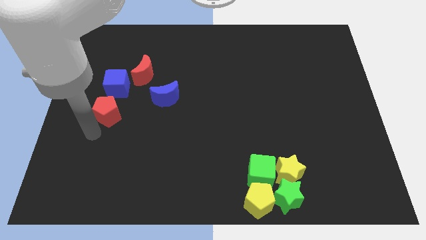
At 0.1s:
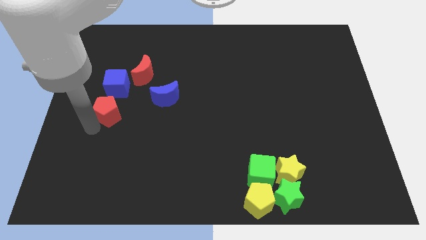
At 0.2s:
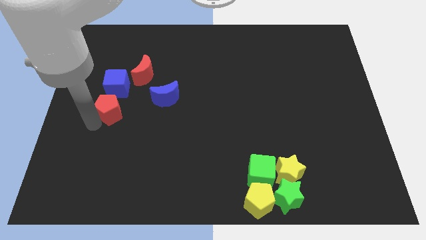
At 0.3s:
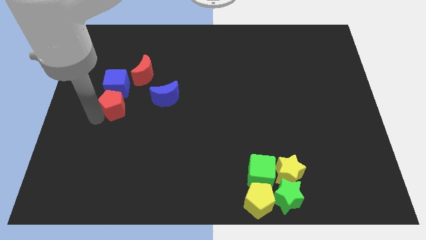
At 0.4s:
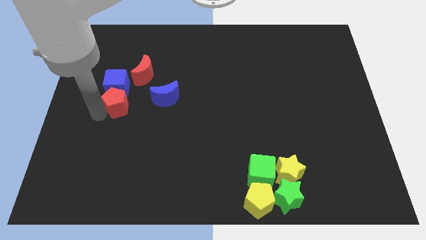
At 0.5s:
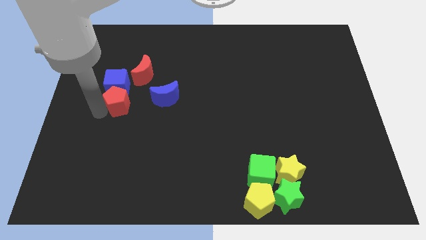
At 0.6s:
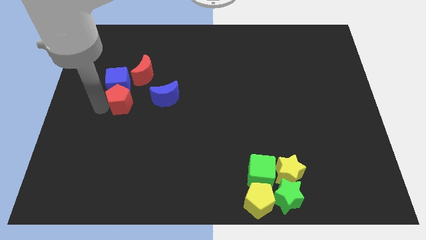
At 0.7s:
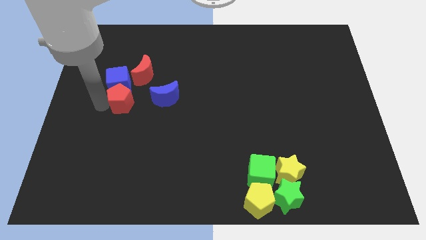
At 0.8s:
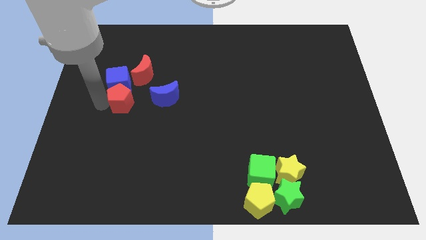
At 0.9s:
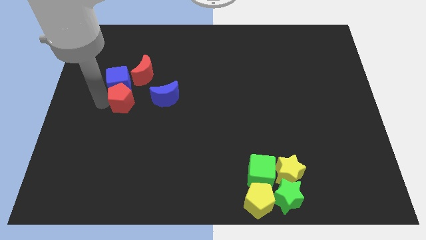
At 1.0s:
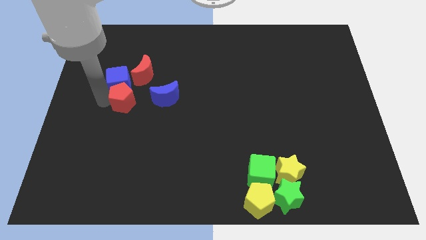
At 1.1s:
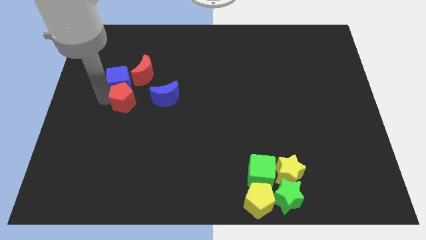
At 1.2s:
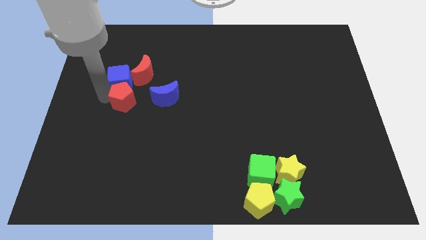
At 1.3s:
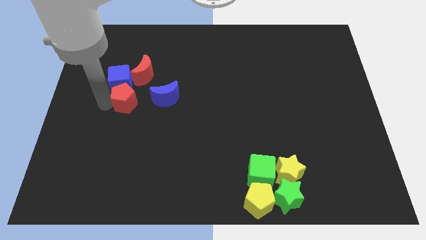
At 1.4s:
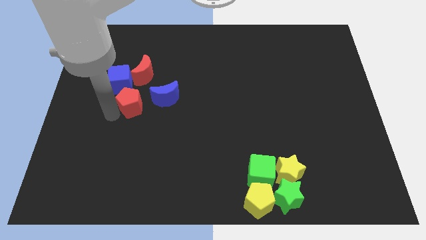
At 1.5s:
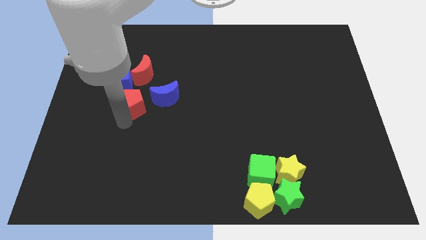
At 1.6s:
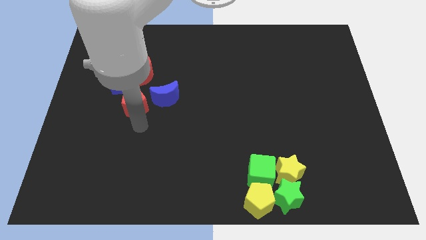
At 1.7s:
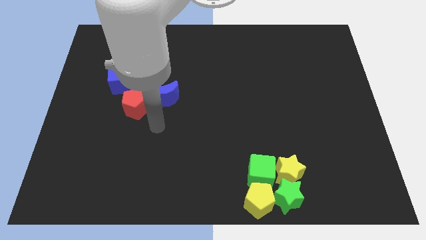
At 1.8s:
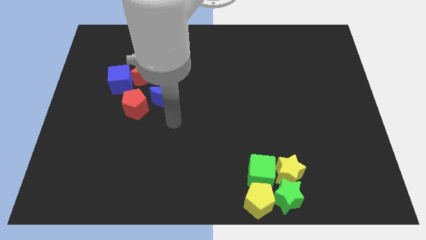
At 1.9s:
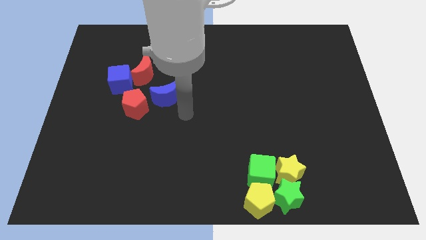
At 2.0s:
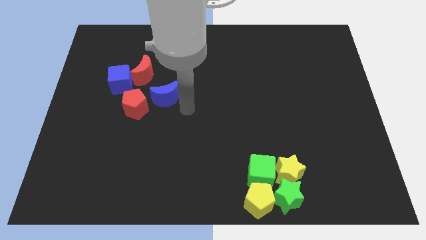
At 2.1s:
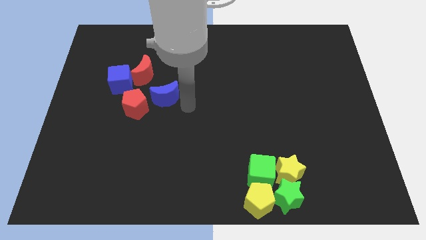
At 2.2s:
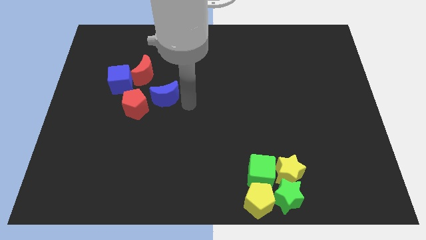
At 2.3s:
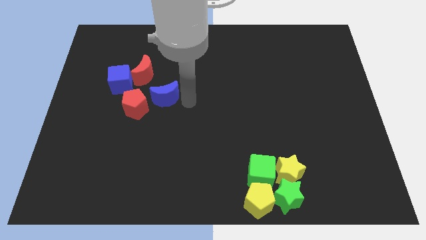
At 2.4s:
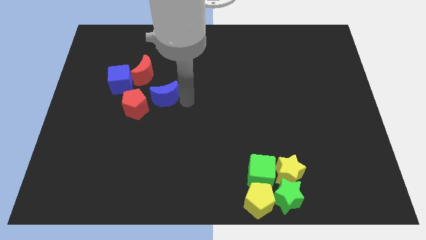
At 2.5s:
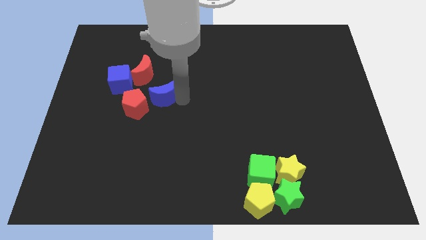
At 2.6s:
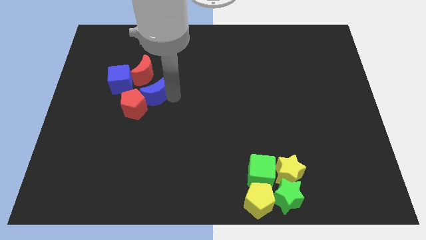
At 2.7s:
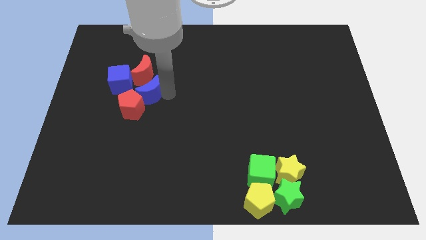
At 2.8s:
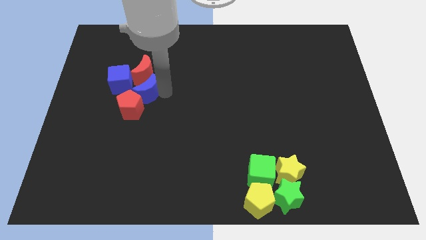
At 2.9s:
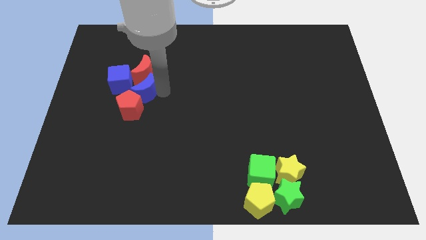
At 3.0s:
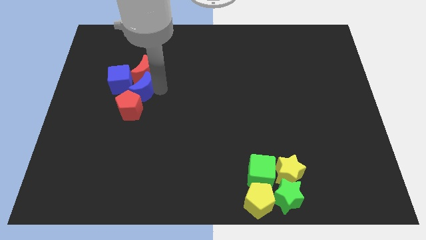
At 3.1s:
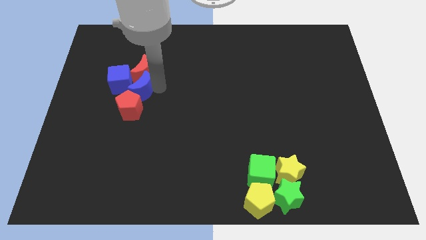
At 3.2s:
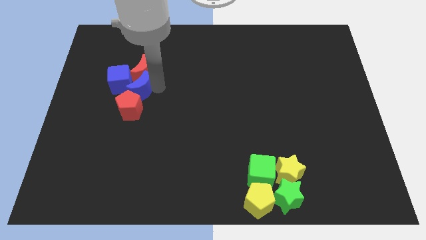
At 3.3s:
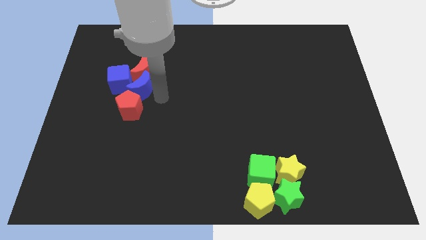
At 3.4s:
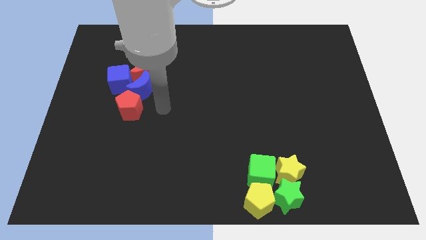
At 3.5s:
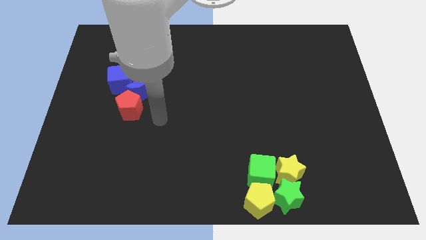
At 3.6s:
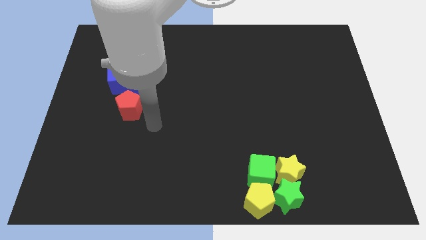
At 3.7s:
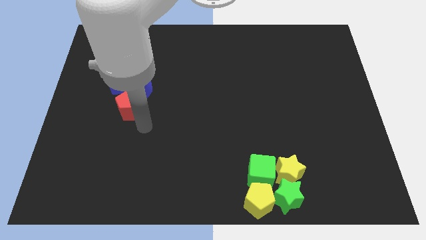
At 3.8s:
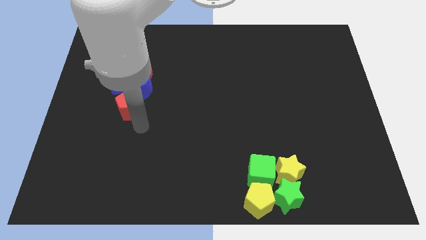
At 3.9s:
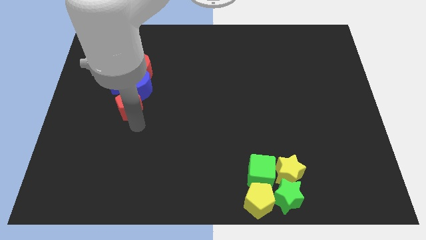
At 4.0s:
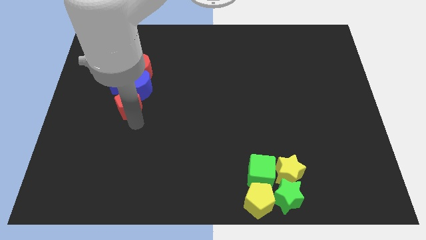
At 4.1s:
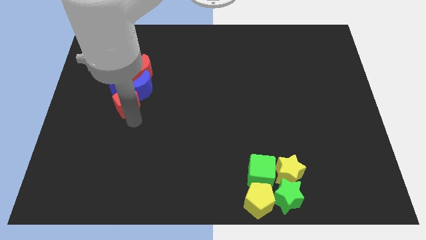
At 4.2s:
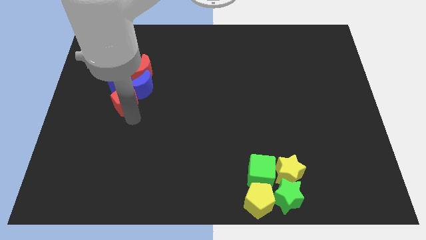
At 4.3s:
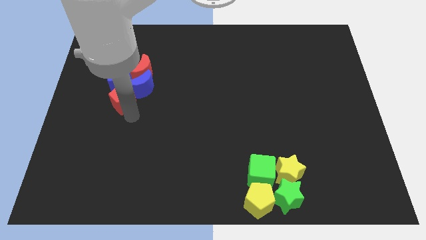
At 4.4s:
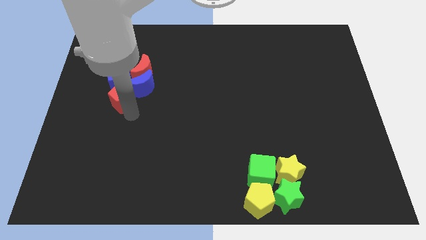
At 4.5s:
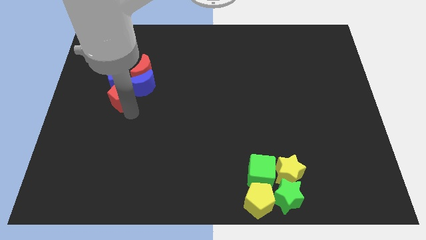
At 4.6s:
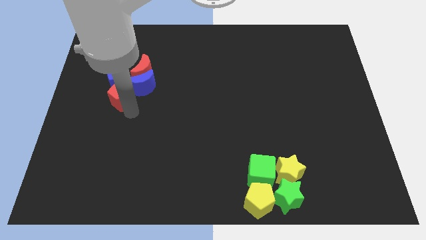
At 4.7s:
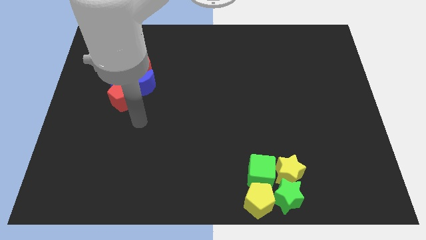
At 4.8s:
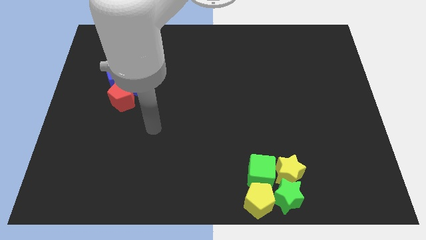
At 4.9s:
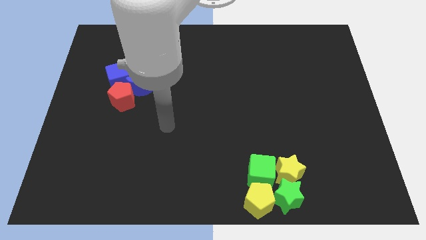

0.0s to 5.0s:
push the red and blue together to form a group
